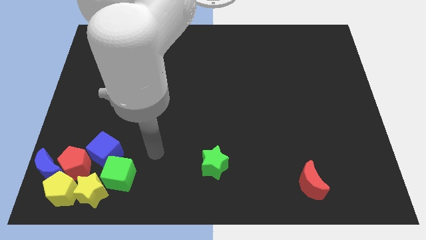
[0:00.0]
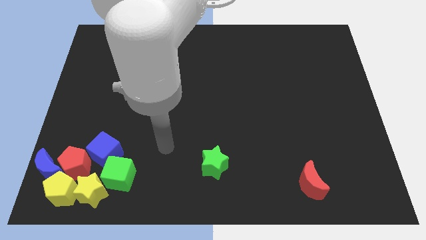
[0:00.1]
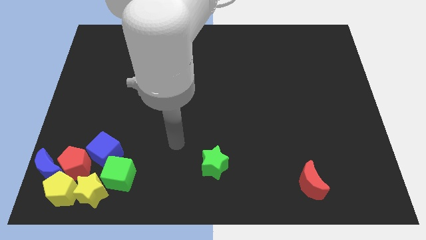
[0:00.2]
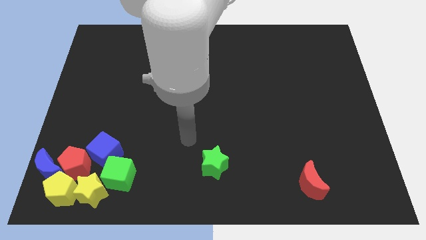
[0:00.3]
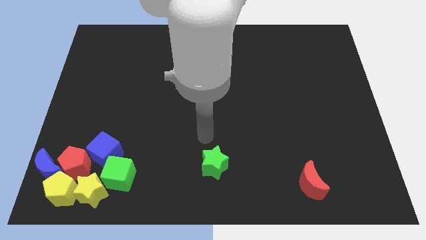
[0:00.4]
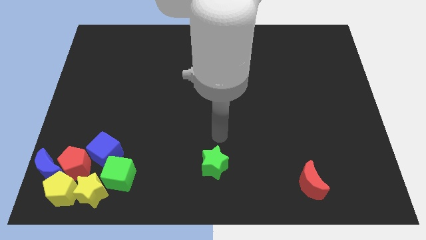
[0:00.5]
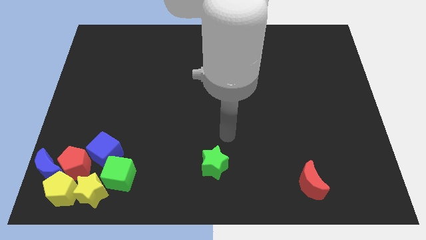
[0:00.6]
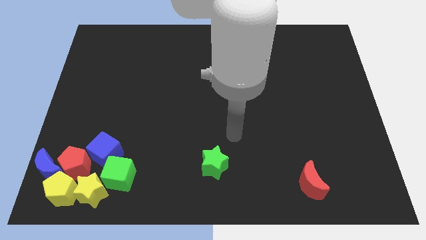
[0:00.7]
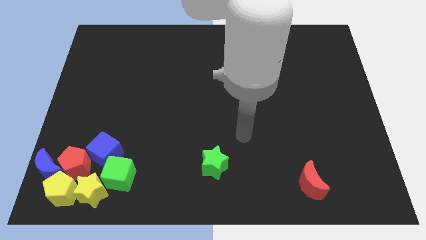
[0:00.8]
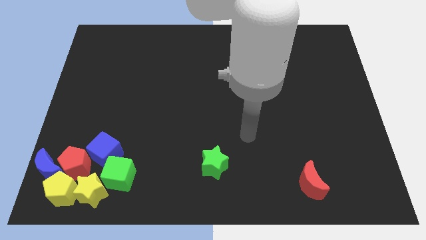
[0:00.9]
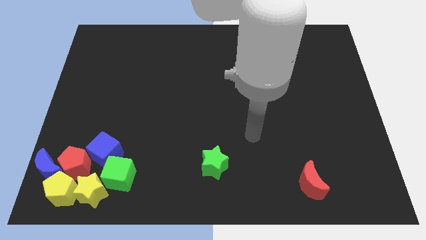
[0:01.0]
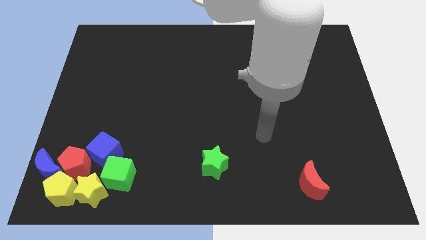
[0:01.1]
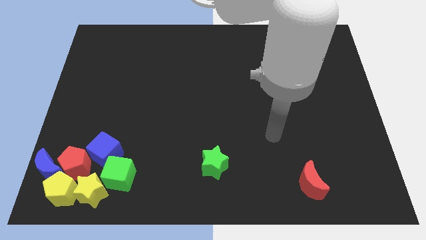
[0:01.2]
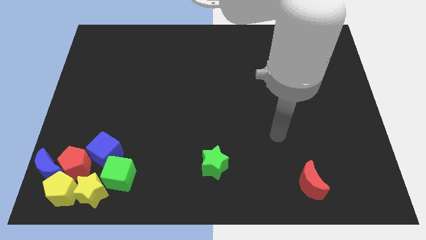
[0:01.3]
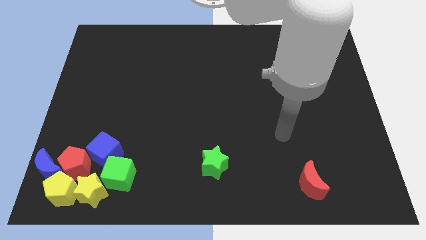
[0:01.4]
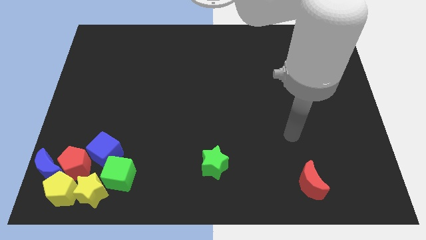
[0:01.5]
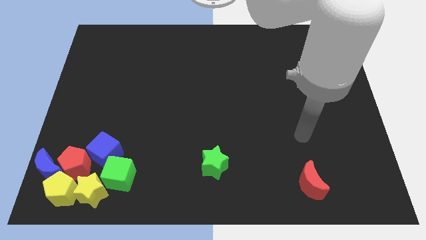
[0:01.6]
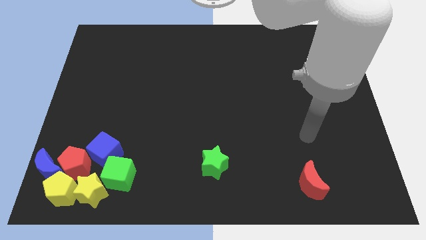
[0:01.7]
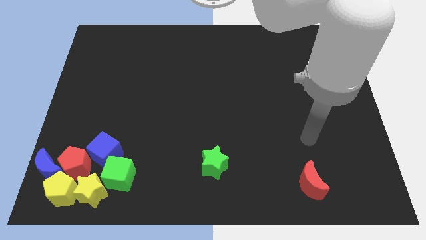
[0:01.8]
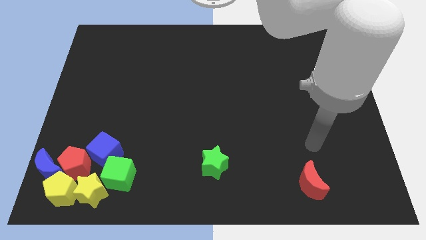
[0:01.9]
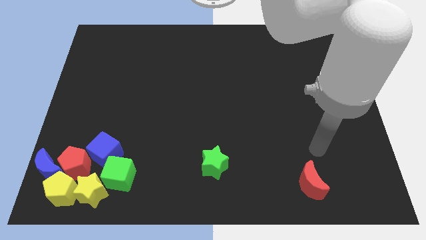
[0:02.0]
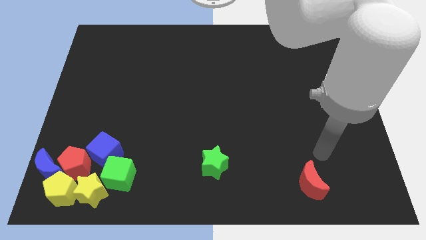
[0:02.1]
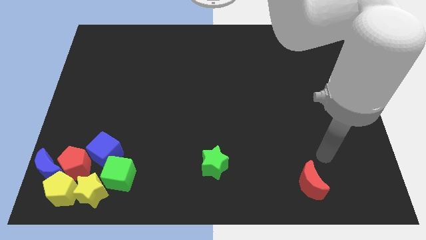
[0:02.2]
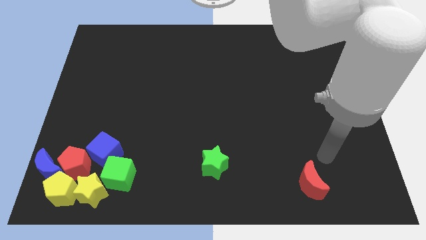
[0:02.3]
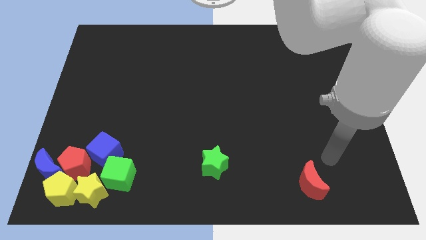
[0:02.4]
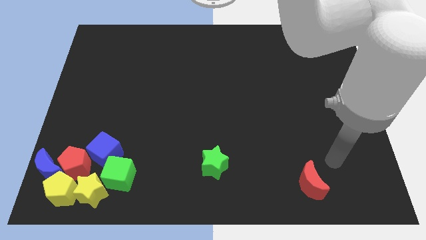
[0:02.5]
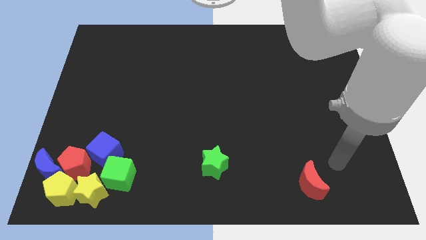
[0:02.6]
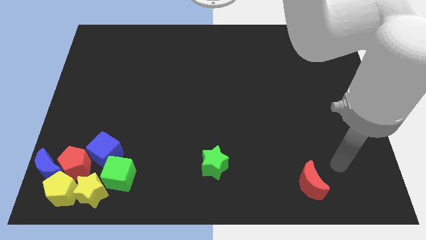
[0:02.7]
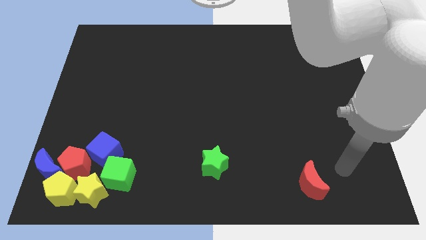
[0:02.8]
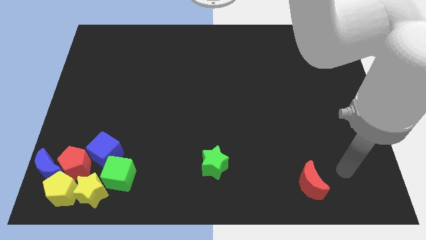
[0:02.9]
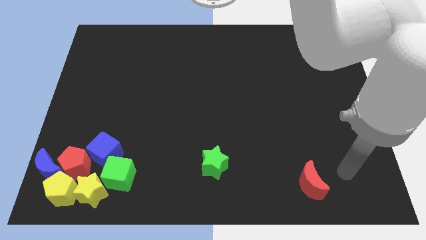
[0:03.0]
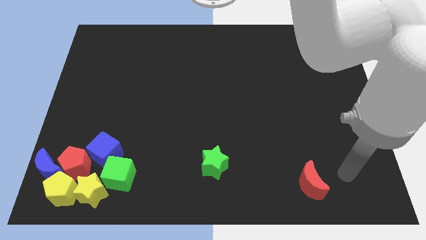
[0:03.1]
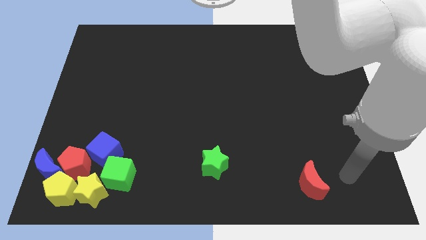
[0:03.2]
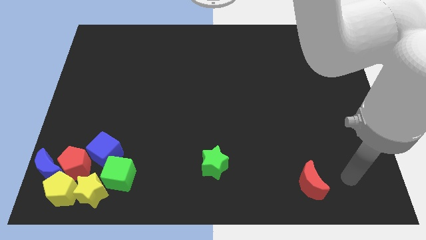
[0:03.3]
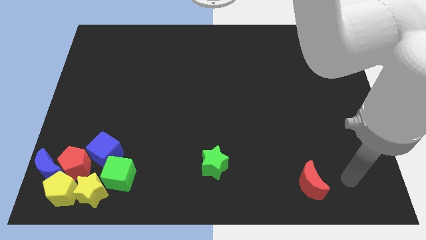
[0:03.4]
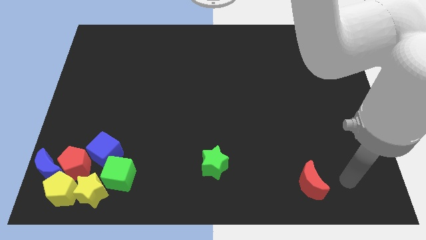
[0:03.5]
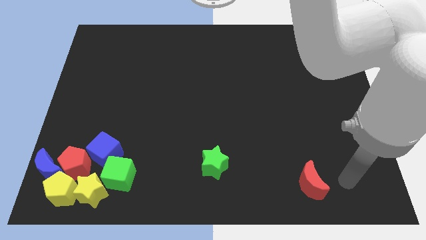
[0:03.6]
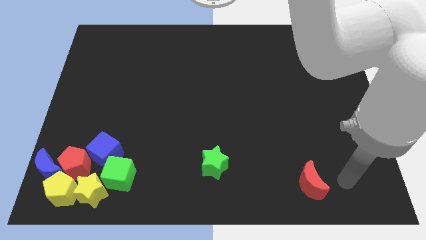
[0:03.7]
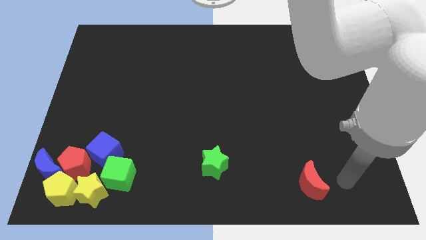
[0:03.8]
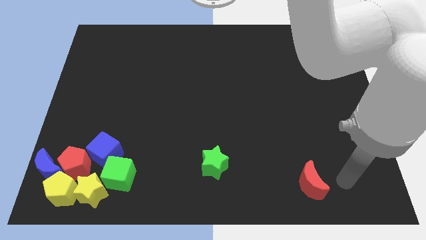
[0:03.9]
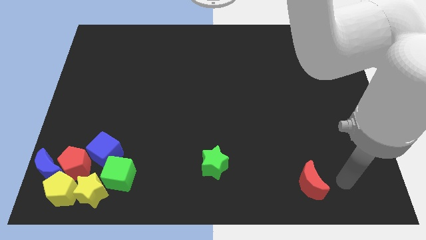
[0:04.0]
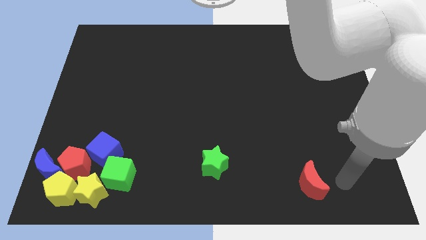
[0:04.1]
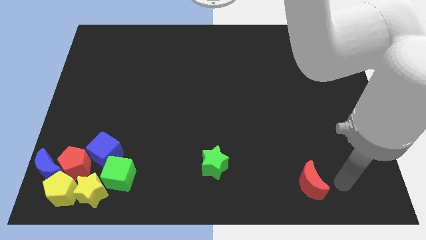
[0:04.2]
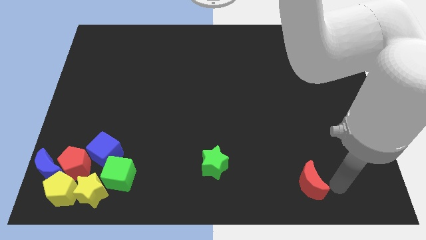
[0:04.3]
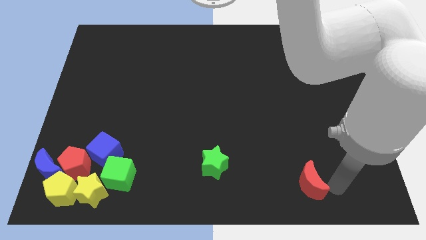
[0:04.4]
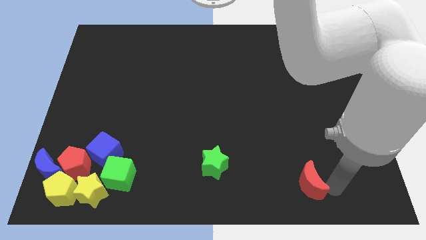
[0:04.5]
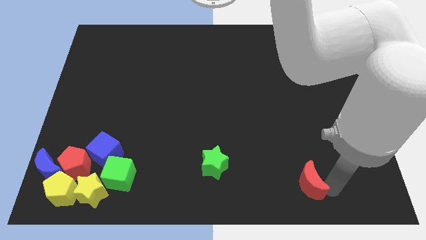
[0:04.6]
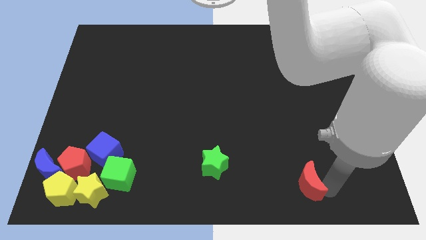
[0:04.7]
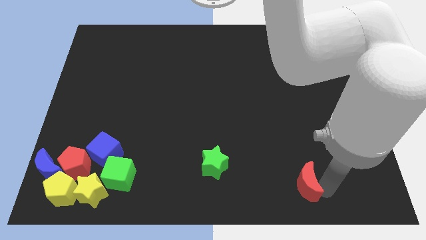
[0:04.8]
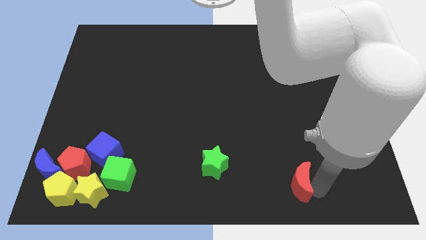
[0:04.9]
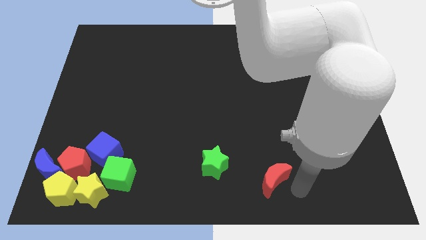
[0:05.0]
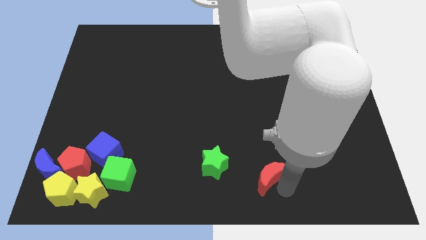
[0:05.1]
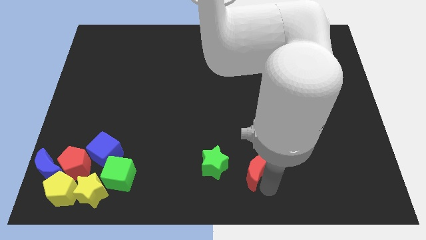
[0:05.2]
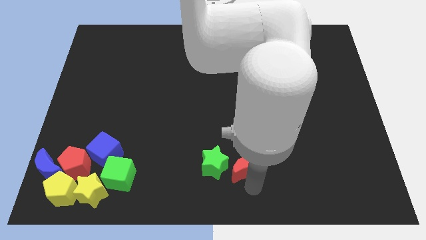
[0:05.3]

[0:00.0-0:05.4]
move the red crescent to the right of the green star

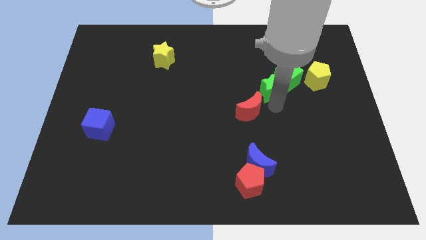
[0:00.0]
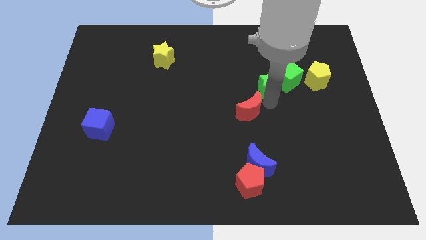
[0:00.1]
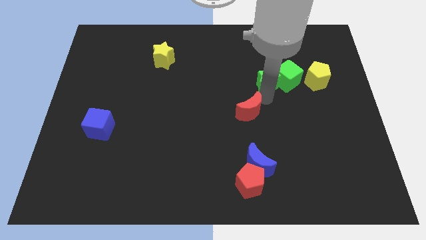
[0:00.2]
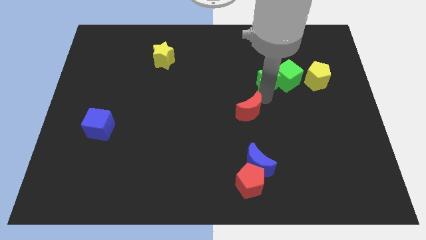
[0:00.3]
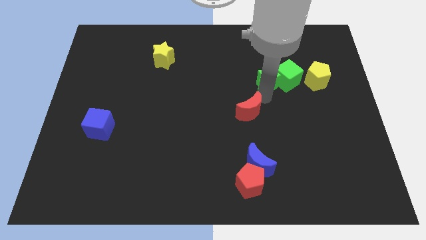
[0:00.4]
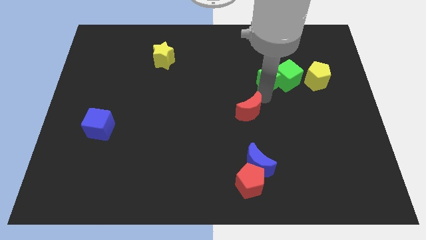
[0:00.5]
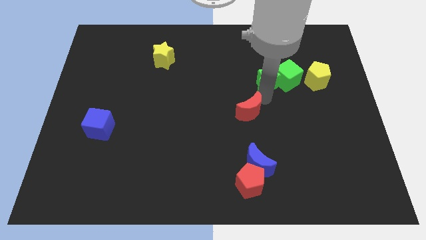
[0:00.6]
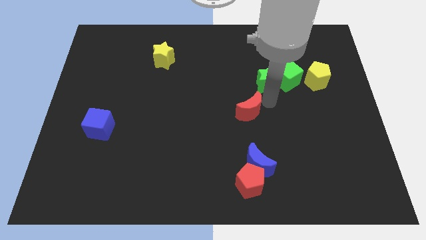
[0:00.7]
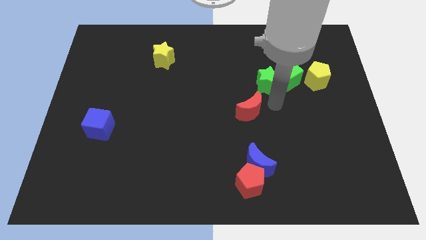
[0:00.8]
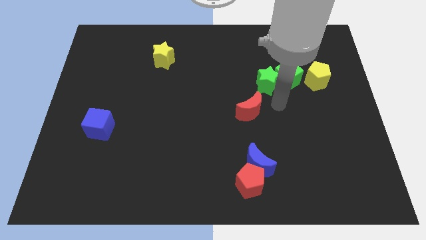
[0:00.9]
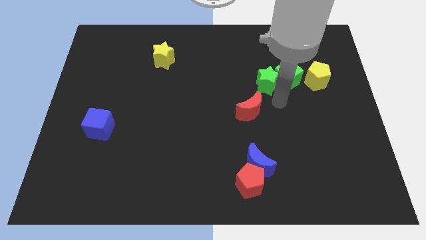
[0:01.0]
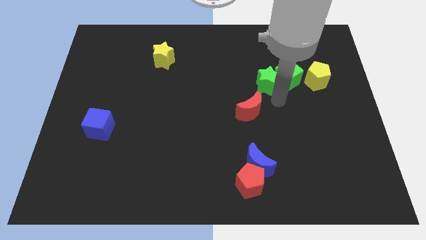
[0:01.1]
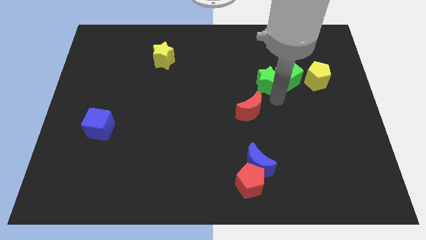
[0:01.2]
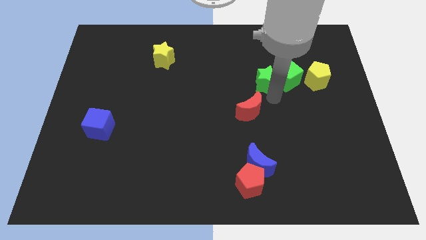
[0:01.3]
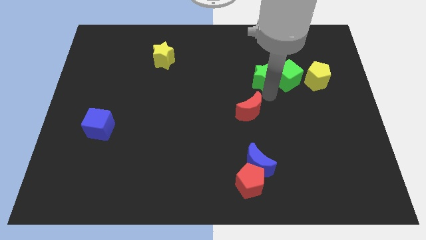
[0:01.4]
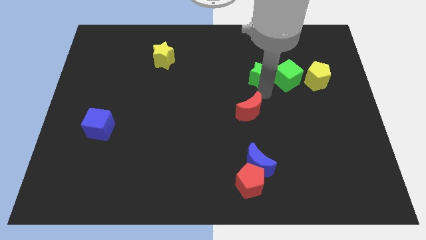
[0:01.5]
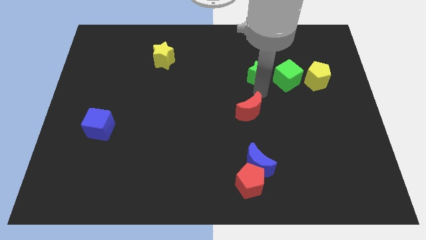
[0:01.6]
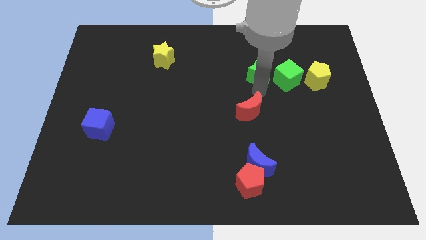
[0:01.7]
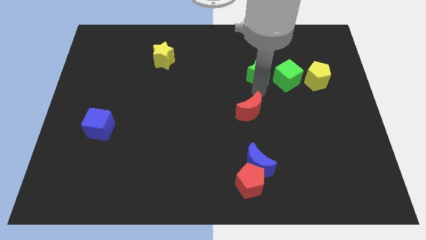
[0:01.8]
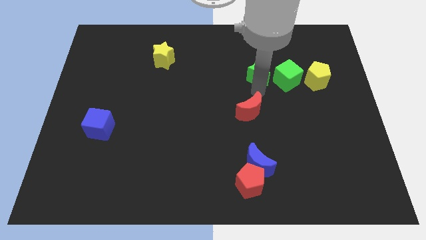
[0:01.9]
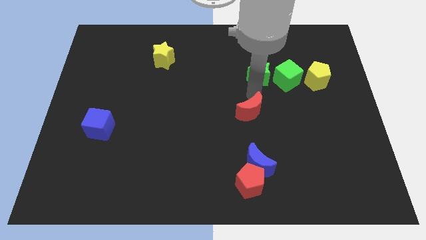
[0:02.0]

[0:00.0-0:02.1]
place green star to left of green cube

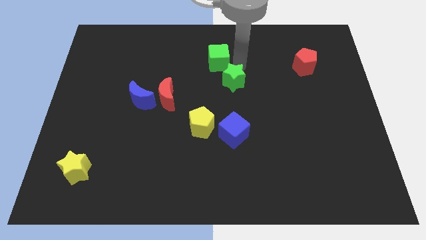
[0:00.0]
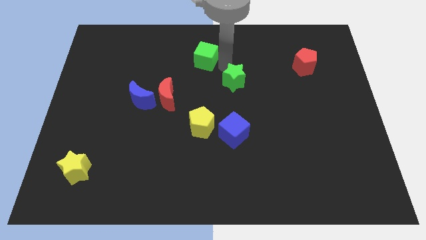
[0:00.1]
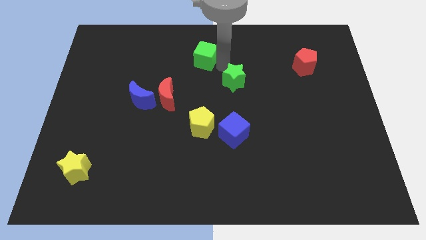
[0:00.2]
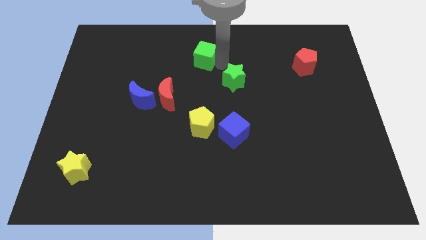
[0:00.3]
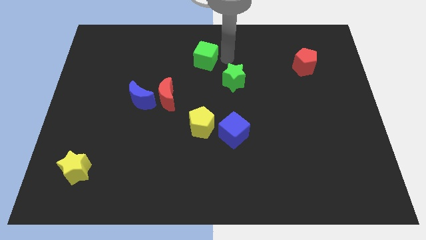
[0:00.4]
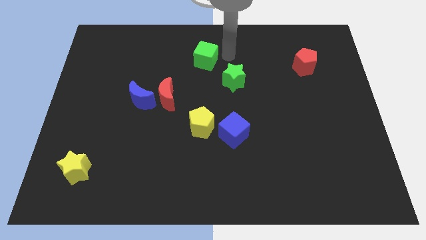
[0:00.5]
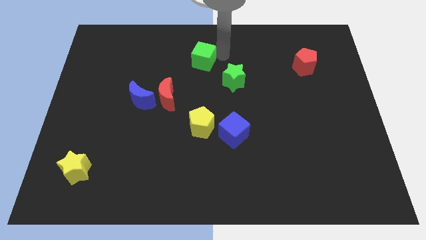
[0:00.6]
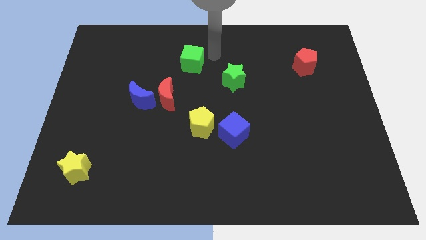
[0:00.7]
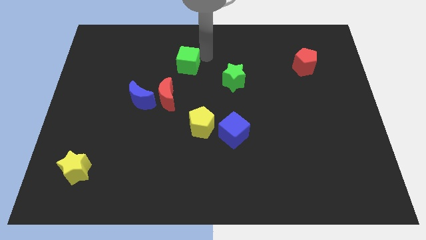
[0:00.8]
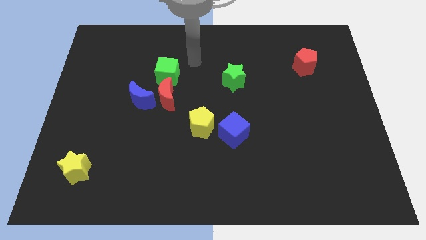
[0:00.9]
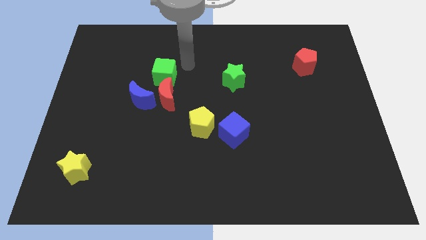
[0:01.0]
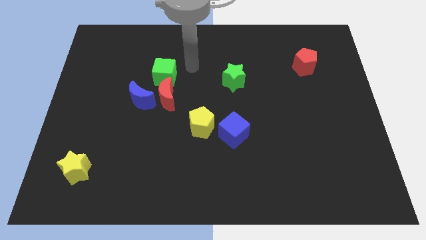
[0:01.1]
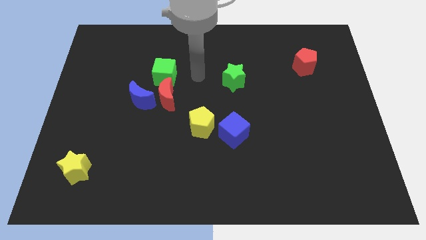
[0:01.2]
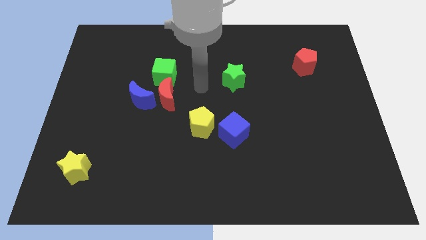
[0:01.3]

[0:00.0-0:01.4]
push the green cube above the red crescent

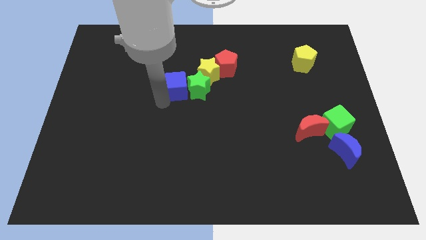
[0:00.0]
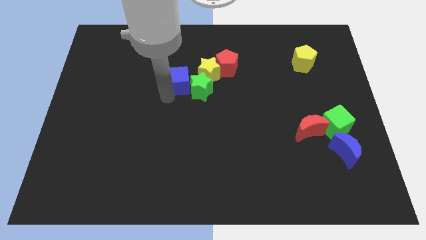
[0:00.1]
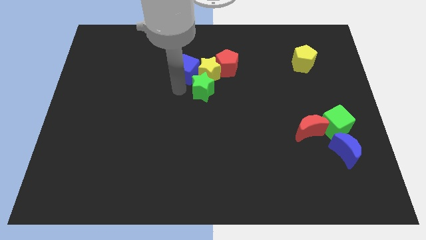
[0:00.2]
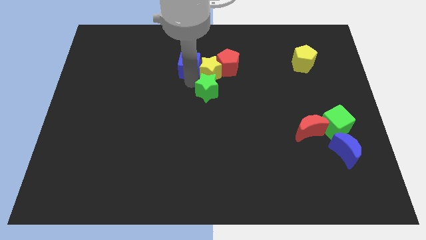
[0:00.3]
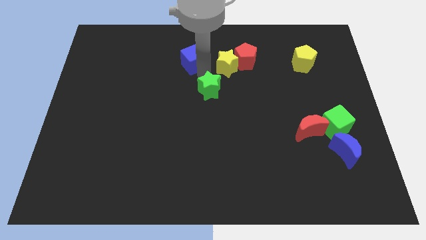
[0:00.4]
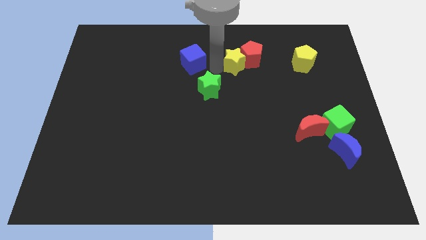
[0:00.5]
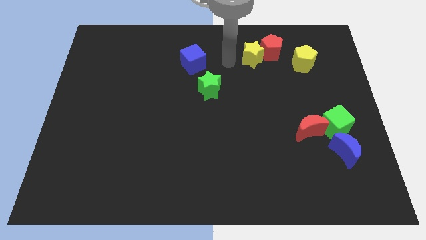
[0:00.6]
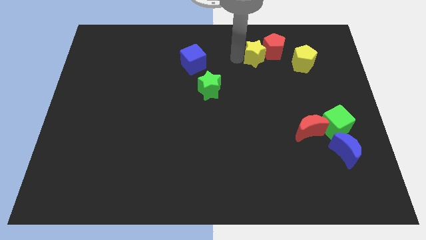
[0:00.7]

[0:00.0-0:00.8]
separate blue cube and yellow star
